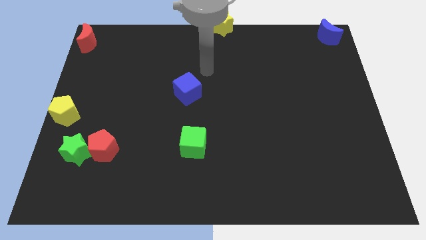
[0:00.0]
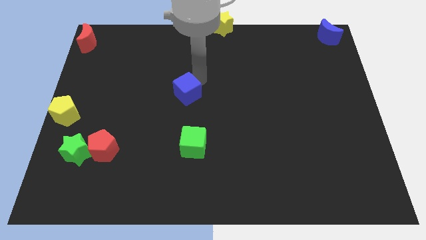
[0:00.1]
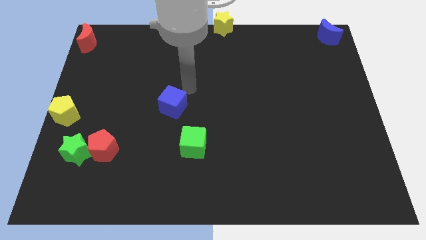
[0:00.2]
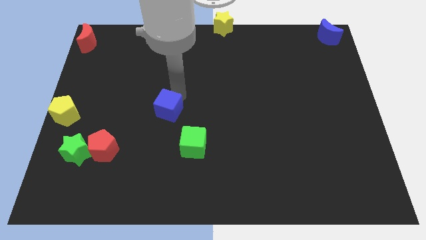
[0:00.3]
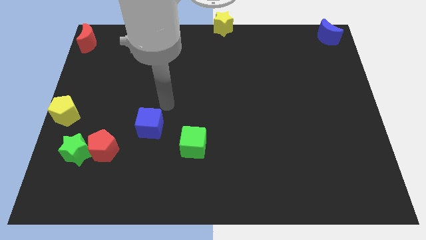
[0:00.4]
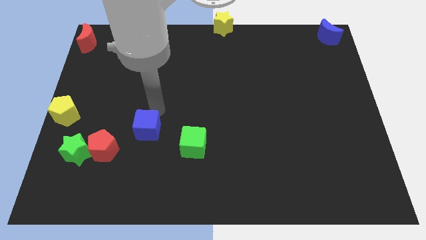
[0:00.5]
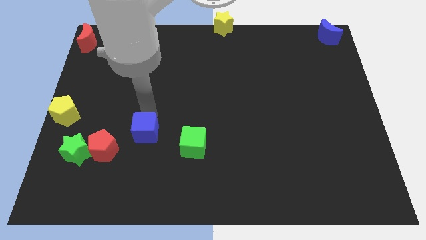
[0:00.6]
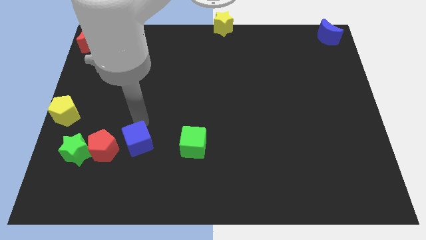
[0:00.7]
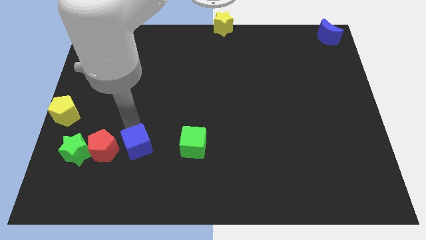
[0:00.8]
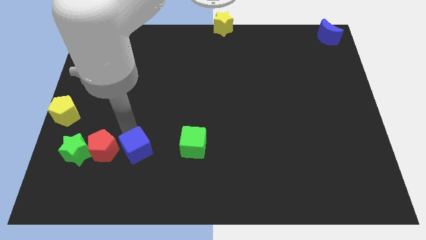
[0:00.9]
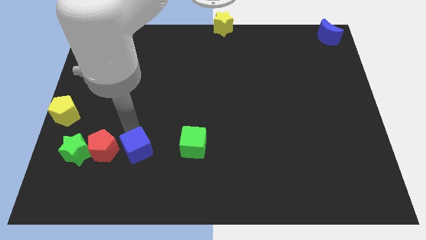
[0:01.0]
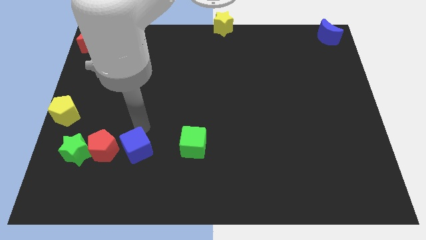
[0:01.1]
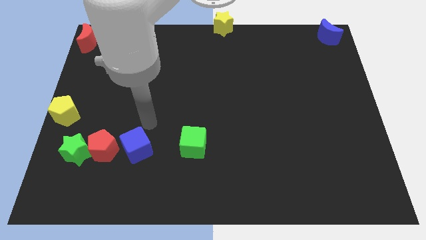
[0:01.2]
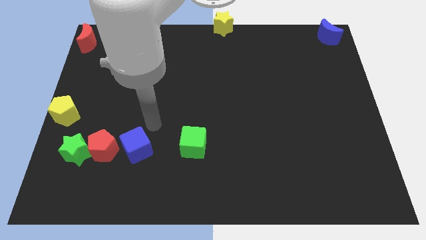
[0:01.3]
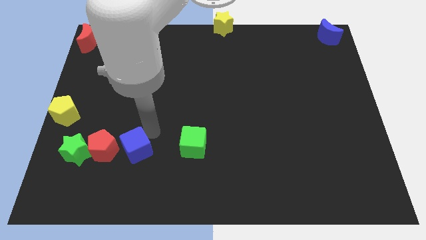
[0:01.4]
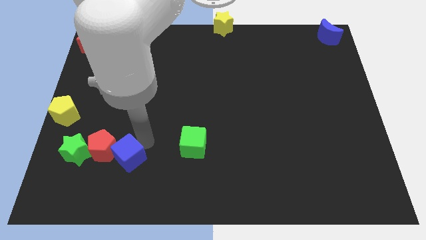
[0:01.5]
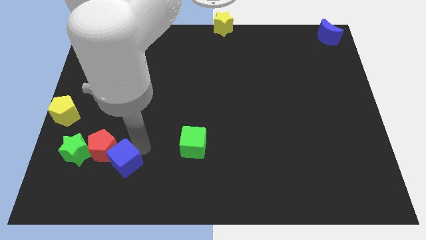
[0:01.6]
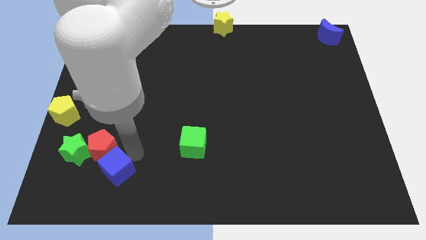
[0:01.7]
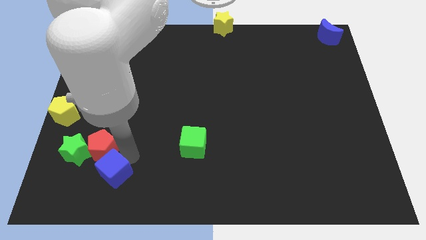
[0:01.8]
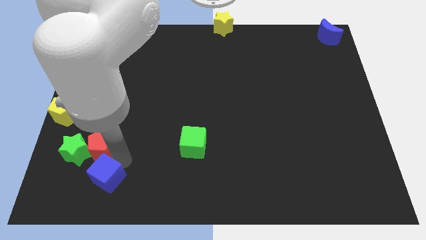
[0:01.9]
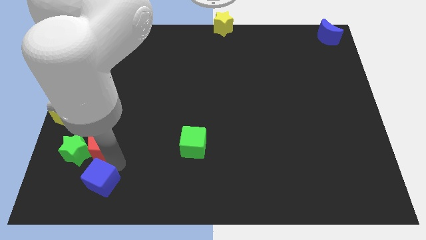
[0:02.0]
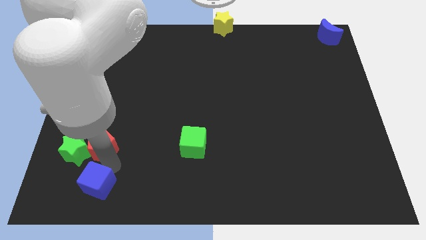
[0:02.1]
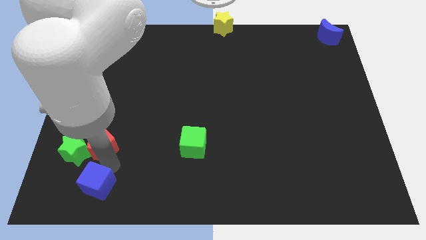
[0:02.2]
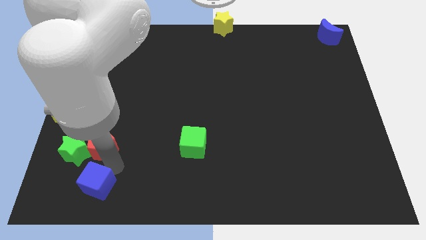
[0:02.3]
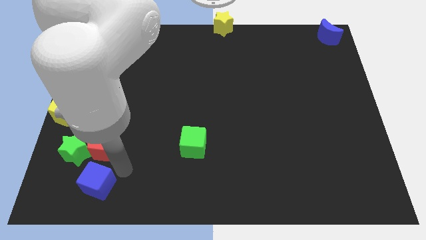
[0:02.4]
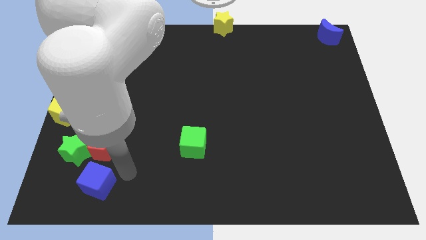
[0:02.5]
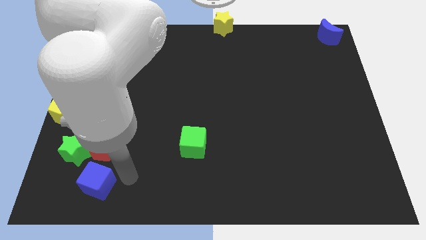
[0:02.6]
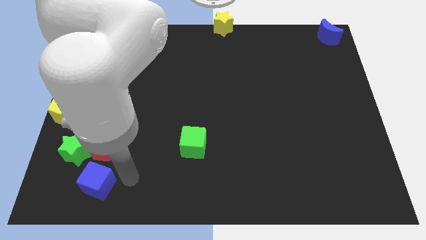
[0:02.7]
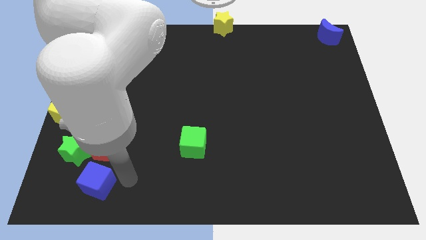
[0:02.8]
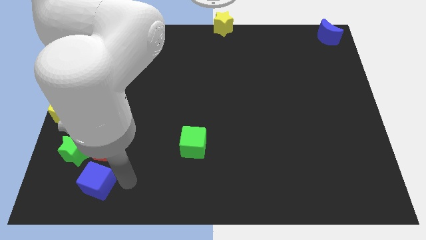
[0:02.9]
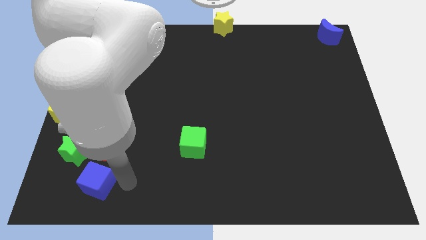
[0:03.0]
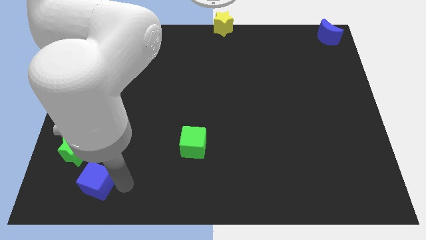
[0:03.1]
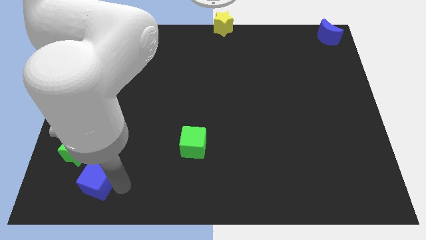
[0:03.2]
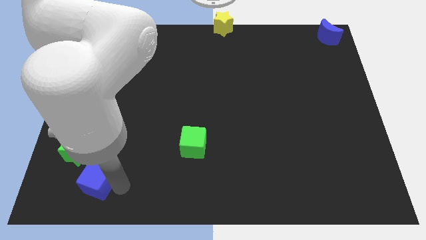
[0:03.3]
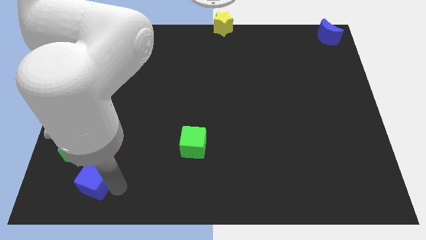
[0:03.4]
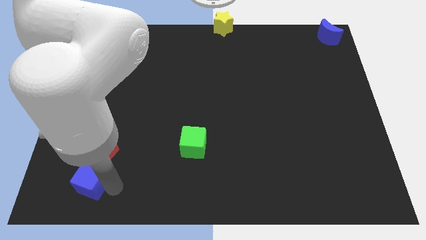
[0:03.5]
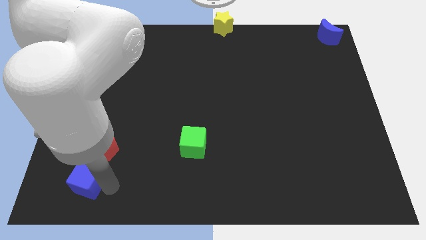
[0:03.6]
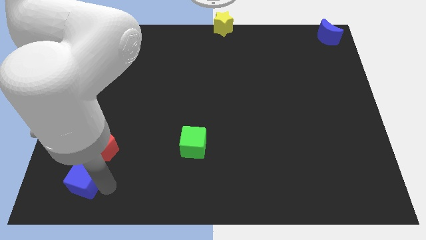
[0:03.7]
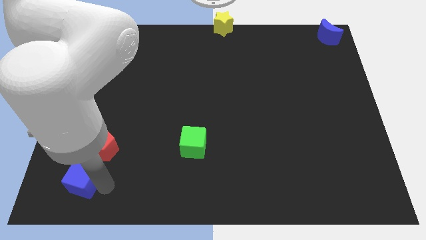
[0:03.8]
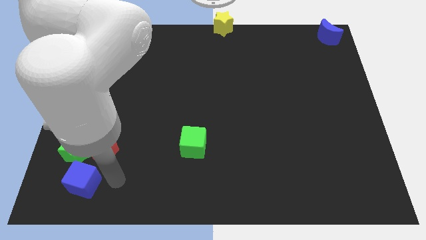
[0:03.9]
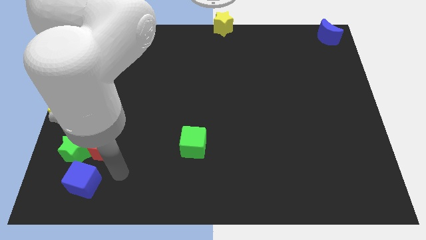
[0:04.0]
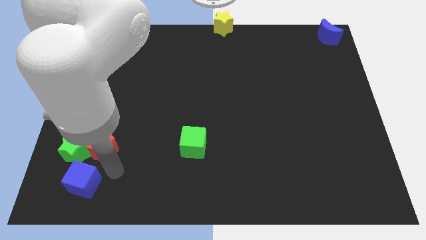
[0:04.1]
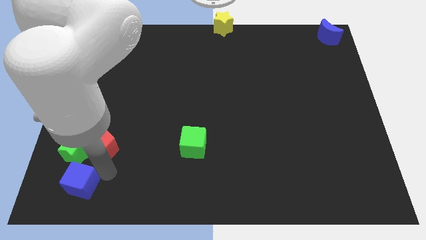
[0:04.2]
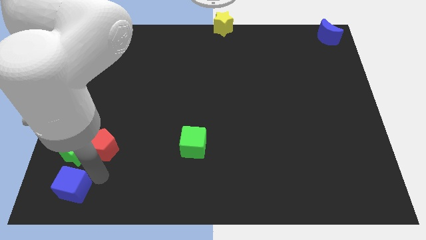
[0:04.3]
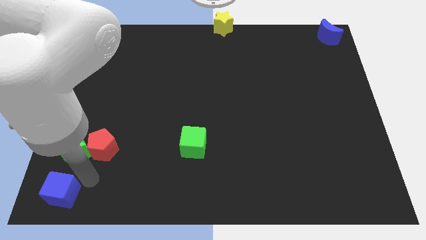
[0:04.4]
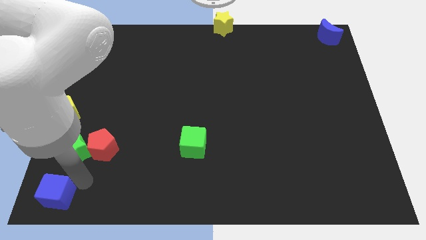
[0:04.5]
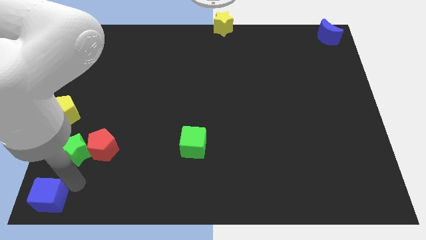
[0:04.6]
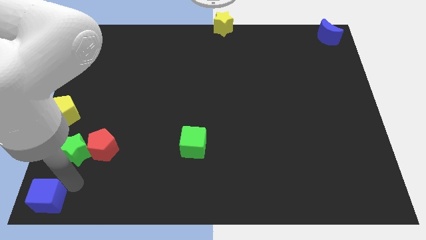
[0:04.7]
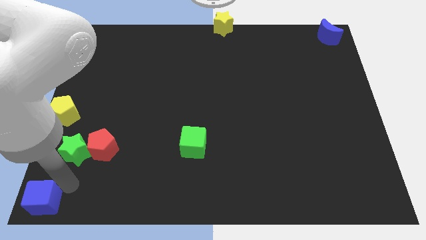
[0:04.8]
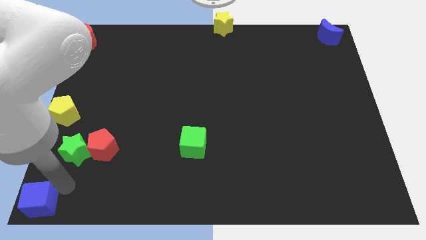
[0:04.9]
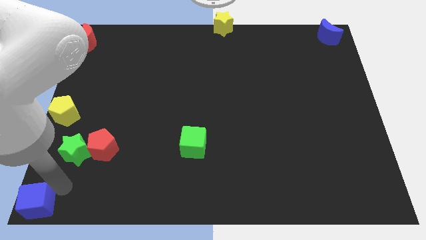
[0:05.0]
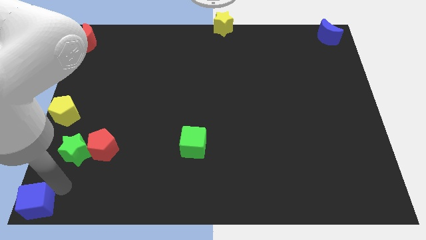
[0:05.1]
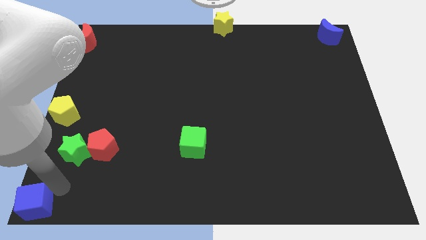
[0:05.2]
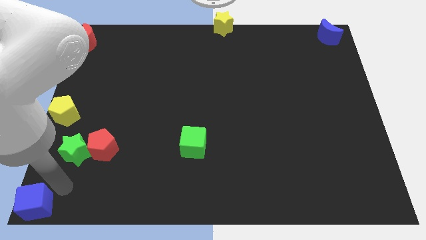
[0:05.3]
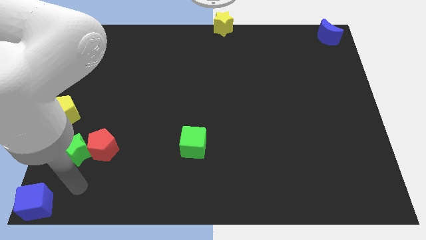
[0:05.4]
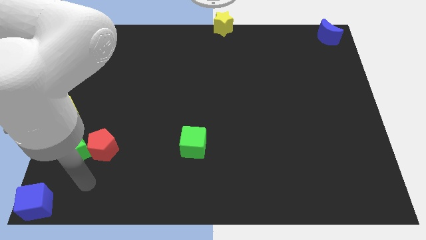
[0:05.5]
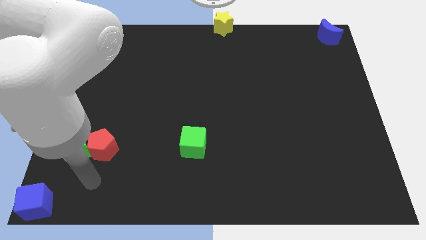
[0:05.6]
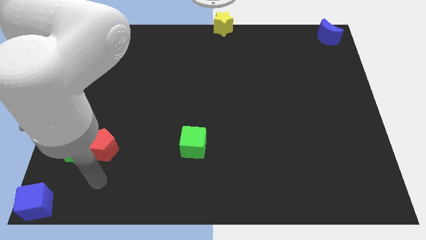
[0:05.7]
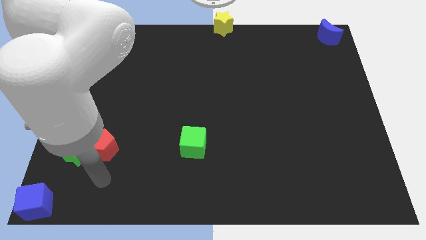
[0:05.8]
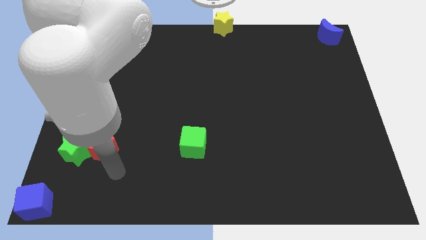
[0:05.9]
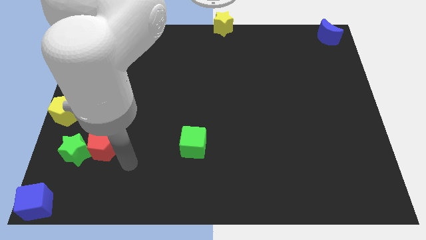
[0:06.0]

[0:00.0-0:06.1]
place the blue cube at the bottom left corner of the board

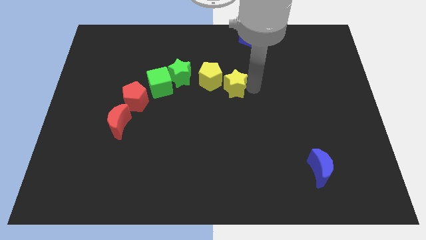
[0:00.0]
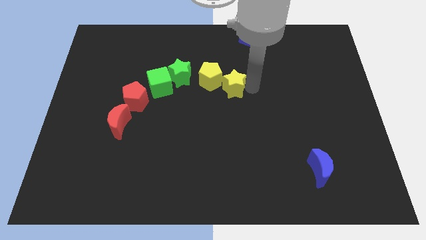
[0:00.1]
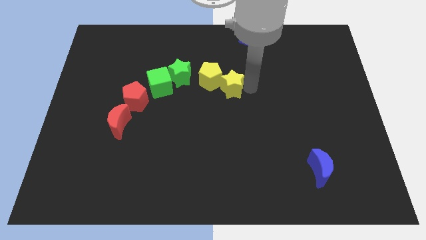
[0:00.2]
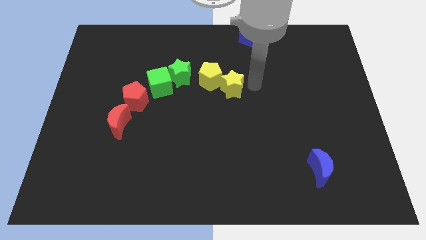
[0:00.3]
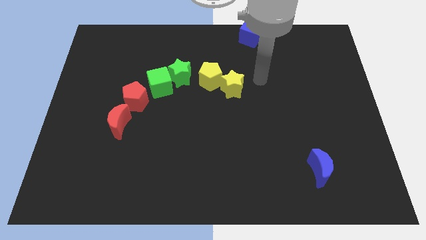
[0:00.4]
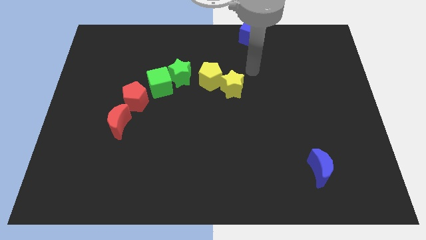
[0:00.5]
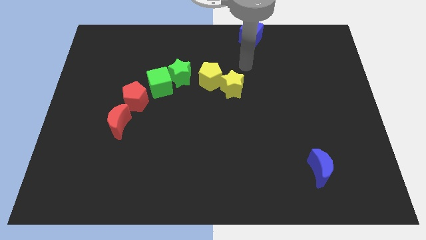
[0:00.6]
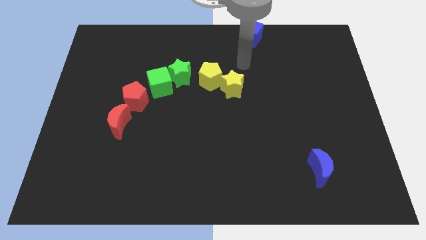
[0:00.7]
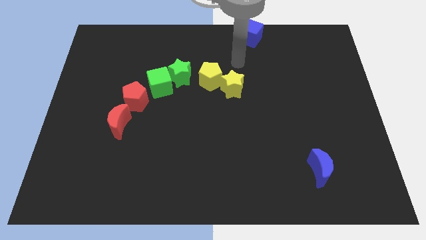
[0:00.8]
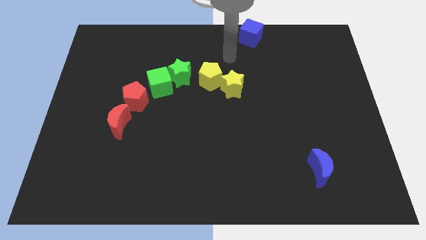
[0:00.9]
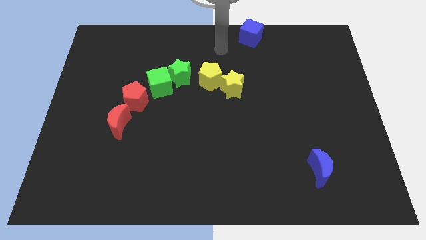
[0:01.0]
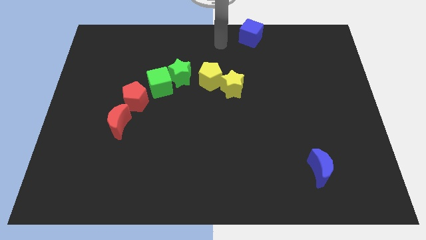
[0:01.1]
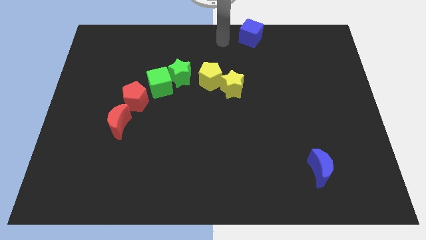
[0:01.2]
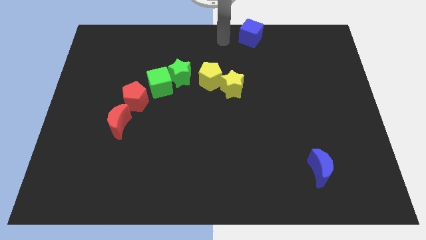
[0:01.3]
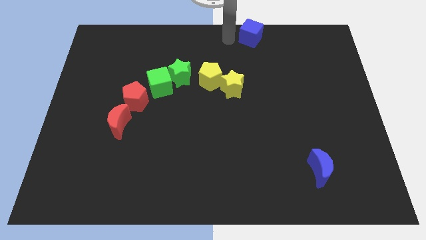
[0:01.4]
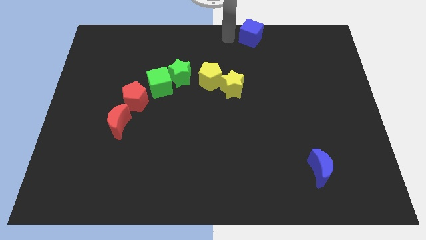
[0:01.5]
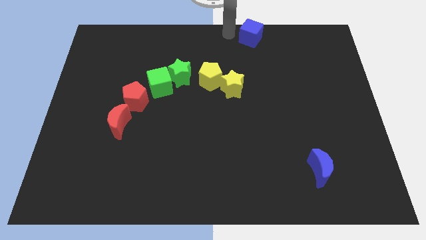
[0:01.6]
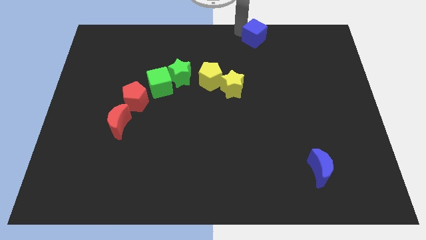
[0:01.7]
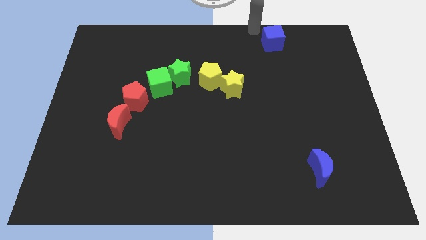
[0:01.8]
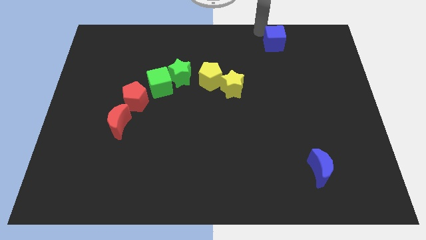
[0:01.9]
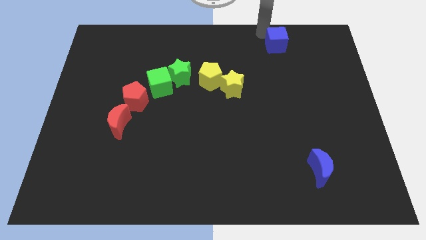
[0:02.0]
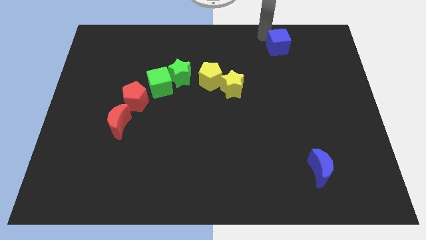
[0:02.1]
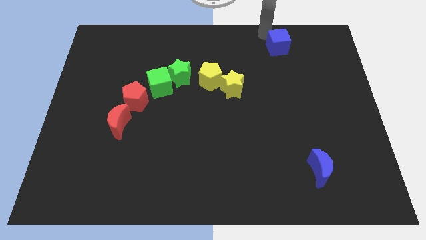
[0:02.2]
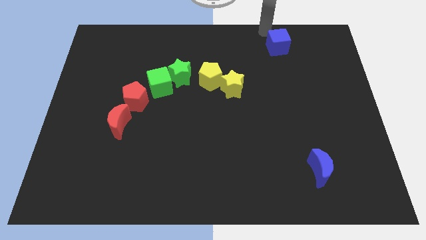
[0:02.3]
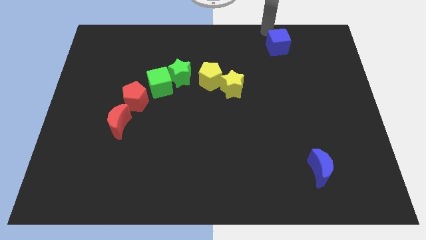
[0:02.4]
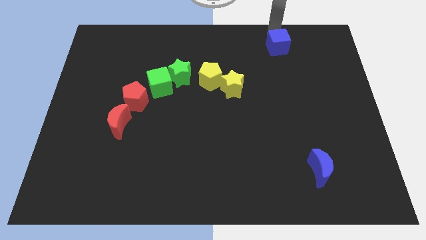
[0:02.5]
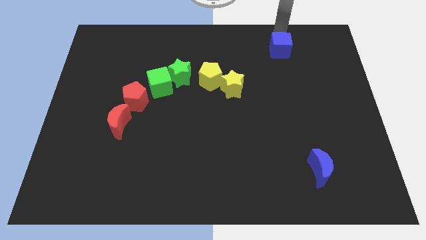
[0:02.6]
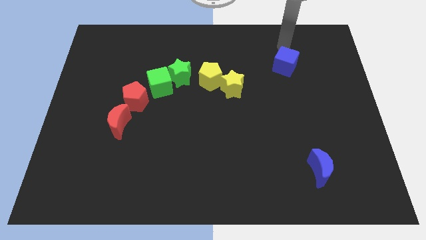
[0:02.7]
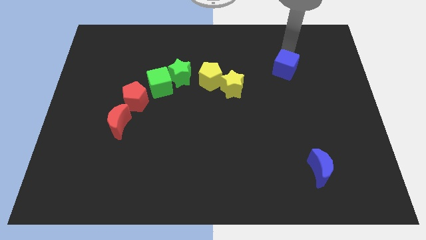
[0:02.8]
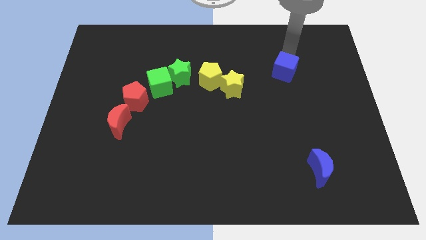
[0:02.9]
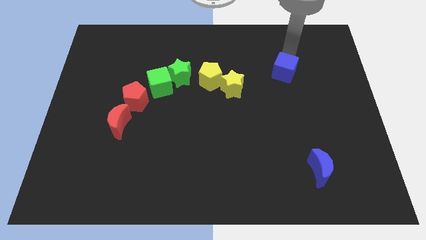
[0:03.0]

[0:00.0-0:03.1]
move the blue cube diagonal to the top right of the yellow star
